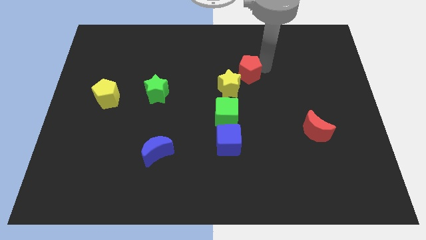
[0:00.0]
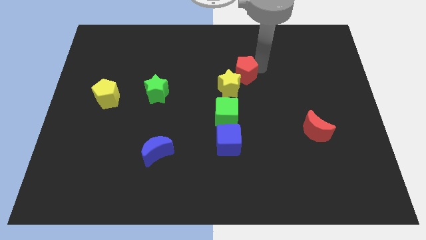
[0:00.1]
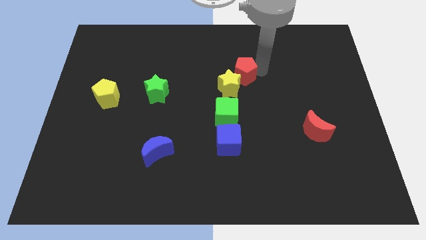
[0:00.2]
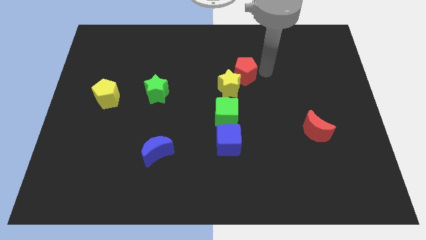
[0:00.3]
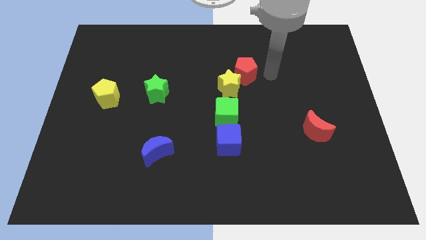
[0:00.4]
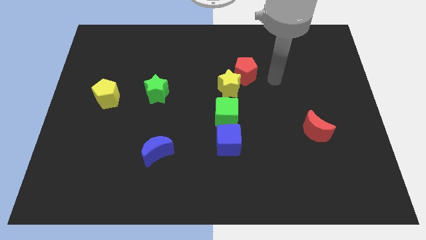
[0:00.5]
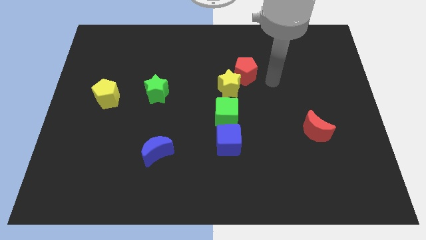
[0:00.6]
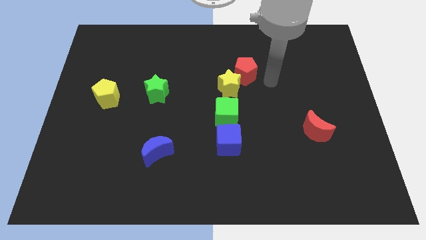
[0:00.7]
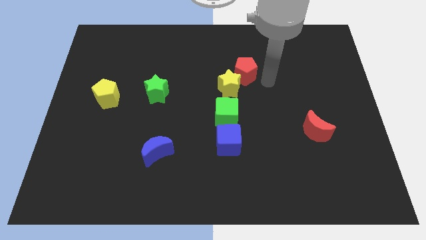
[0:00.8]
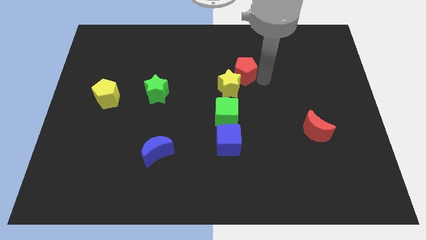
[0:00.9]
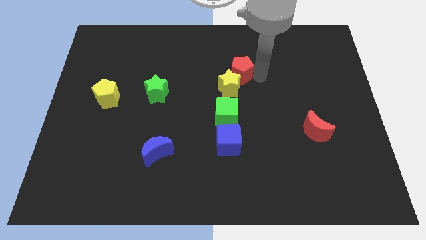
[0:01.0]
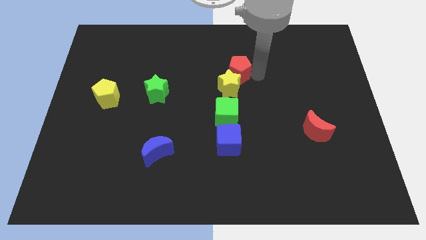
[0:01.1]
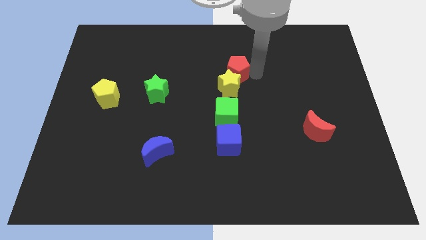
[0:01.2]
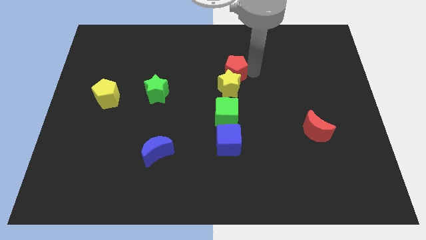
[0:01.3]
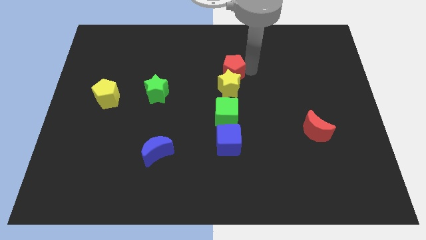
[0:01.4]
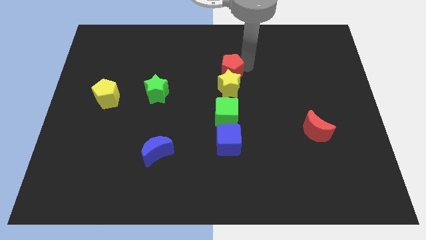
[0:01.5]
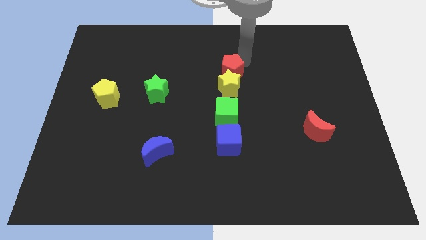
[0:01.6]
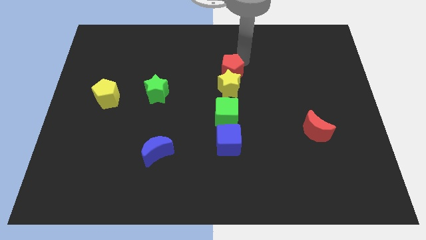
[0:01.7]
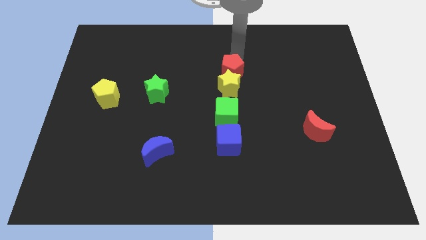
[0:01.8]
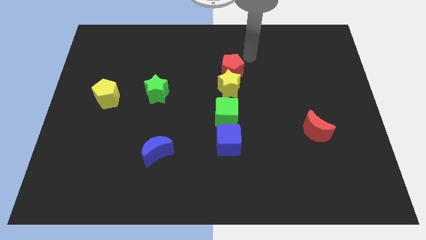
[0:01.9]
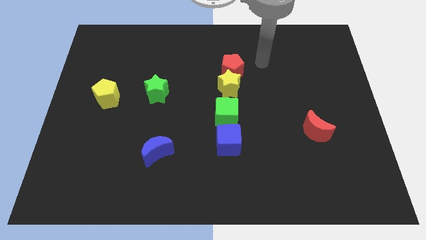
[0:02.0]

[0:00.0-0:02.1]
place red pentagon to the top of yellow star

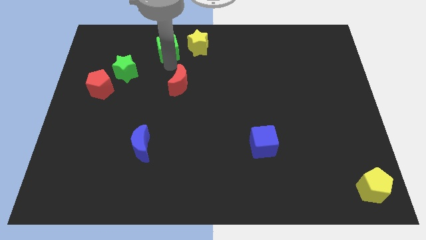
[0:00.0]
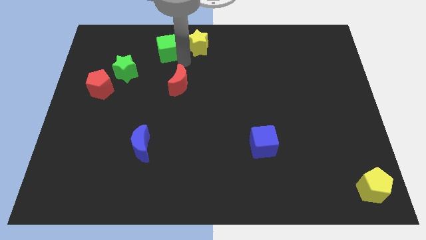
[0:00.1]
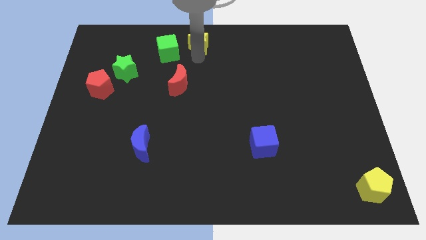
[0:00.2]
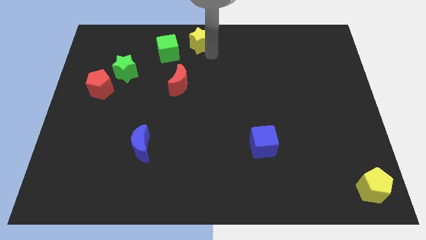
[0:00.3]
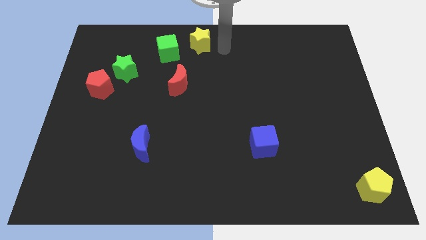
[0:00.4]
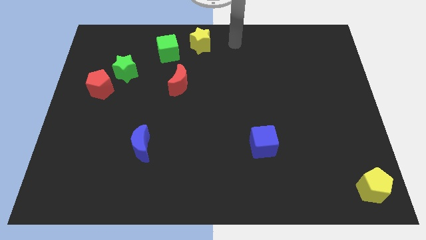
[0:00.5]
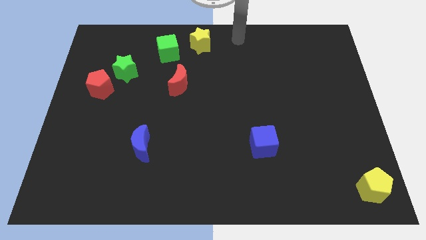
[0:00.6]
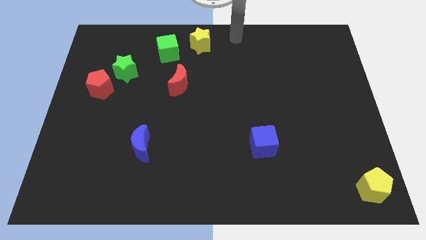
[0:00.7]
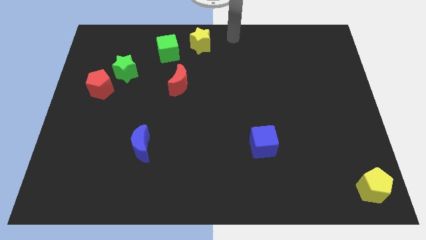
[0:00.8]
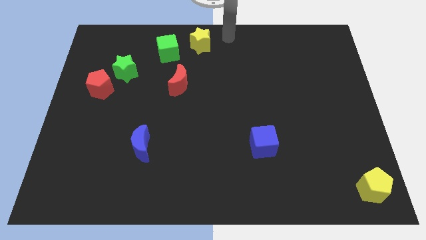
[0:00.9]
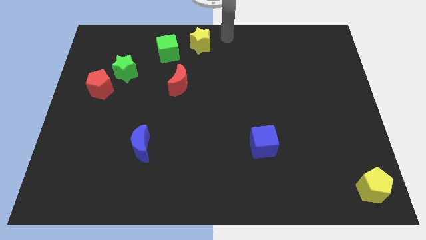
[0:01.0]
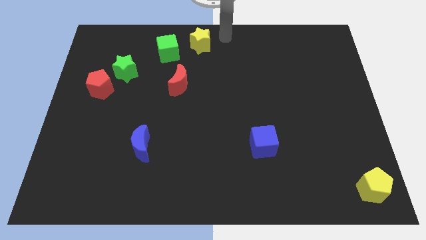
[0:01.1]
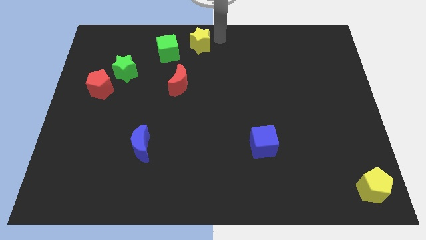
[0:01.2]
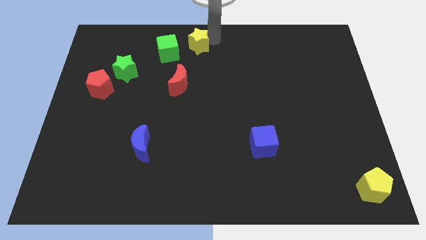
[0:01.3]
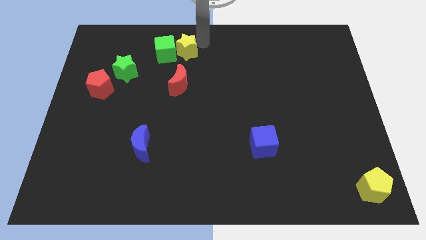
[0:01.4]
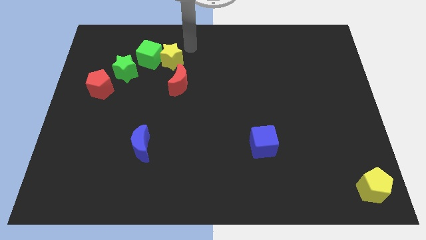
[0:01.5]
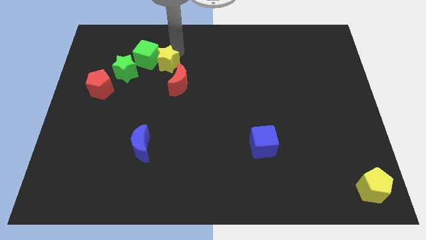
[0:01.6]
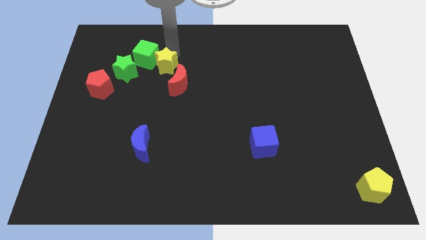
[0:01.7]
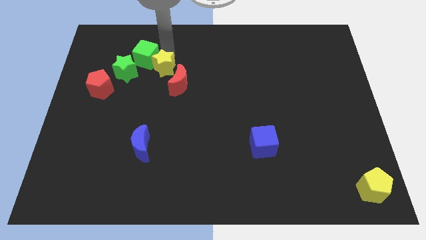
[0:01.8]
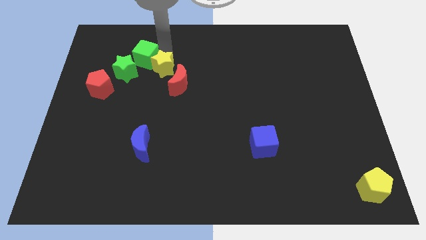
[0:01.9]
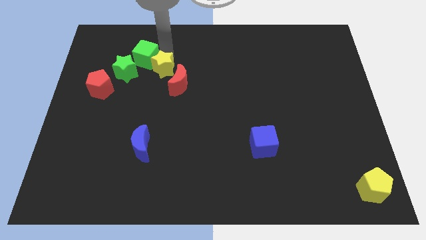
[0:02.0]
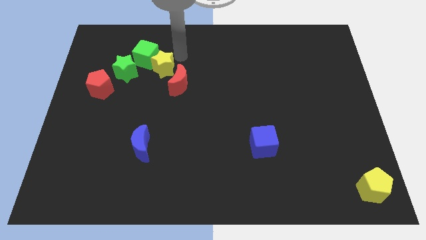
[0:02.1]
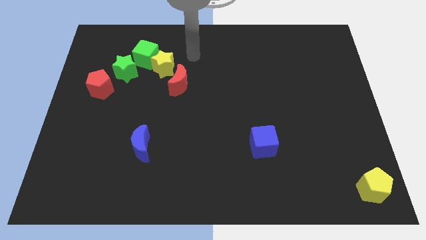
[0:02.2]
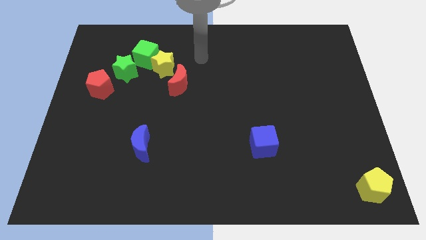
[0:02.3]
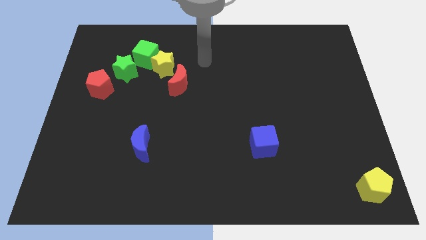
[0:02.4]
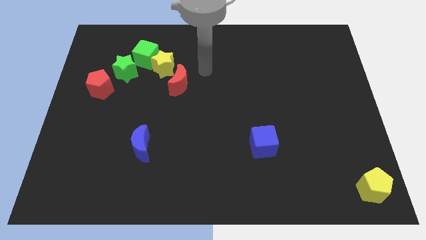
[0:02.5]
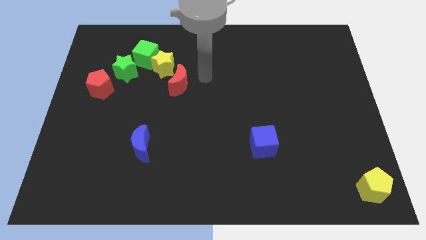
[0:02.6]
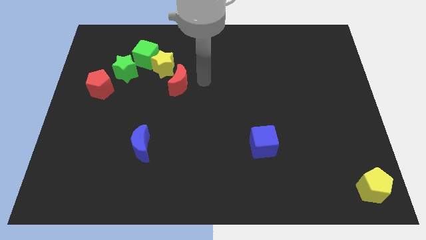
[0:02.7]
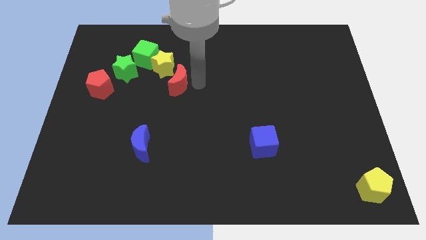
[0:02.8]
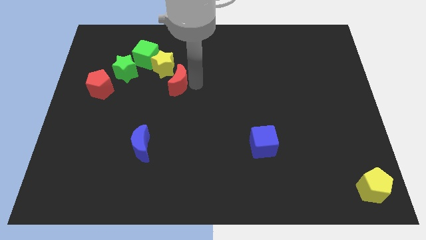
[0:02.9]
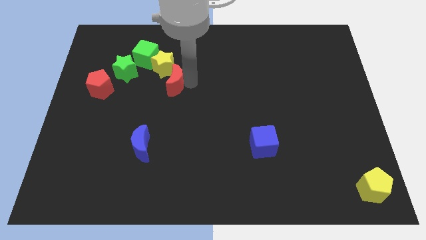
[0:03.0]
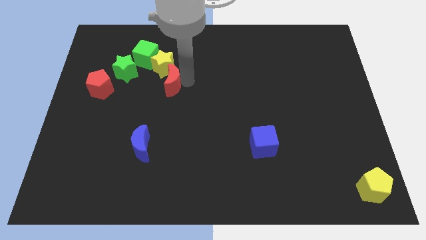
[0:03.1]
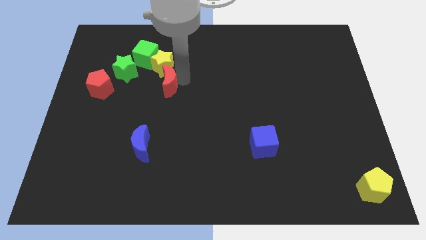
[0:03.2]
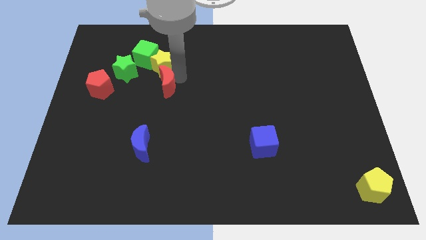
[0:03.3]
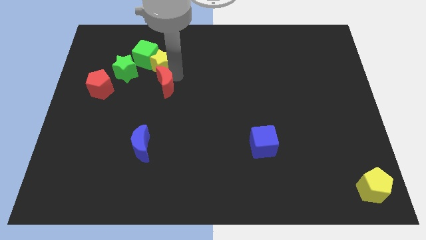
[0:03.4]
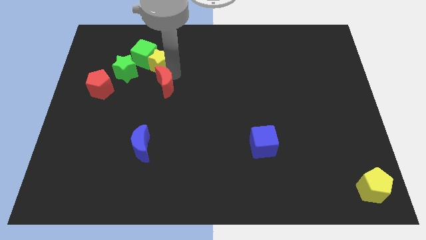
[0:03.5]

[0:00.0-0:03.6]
push the green cube yellow star and red moon to form a group

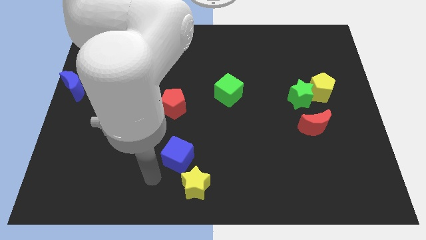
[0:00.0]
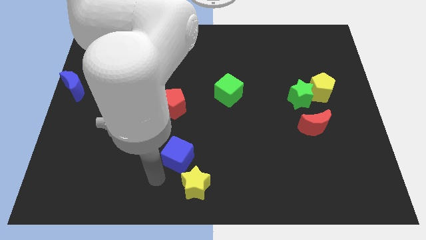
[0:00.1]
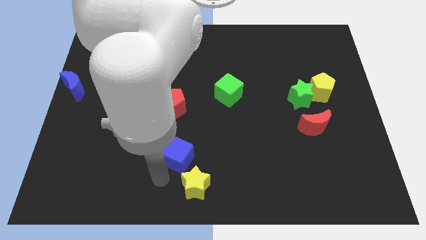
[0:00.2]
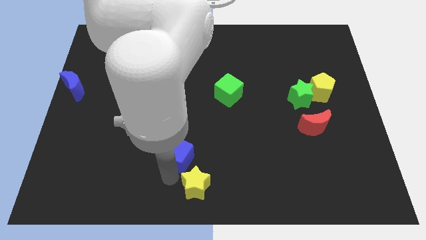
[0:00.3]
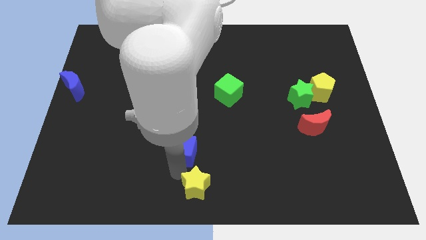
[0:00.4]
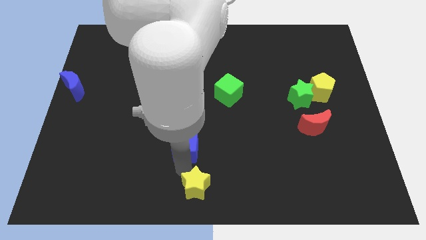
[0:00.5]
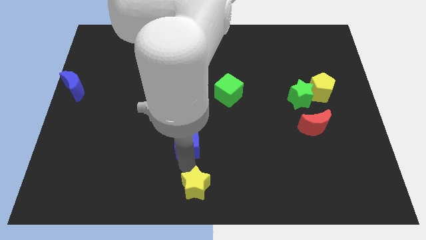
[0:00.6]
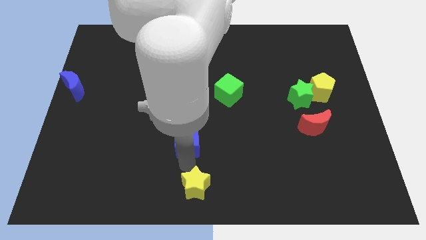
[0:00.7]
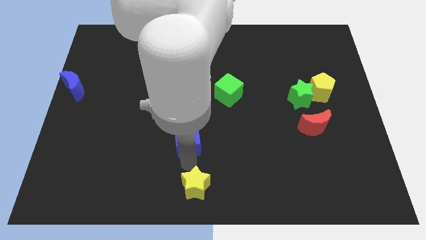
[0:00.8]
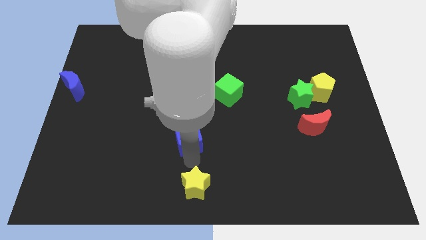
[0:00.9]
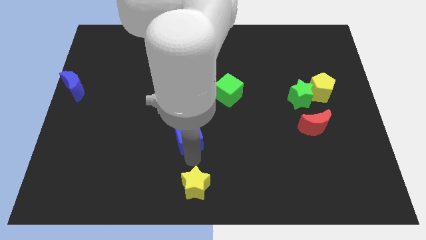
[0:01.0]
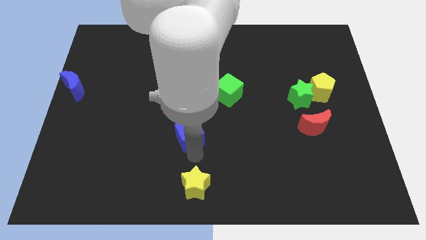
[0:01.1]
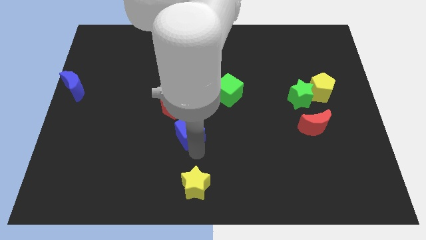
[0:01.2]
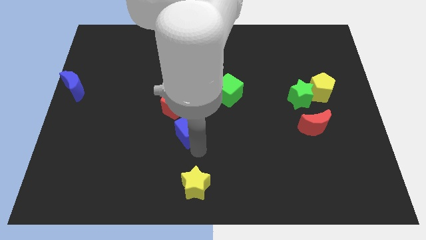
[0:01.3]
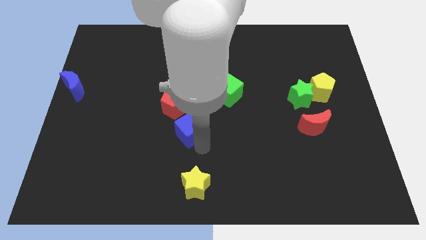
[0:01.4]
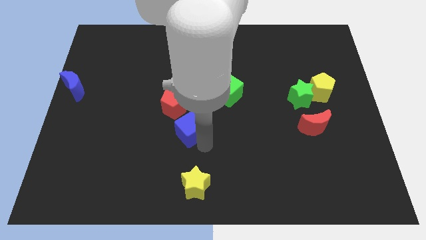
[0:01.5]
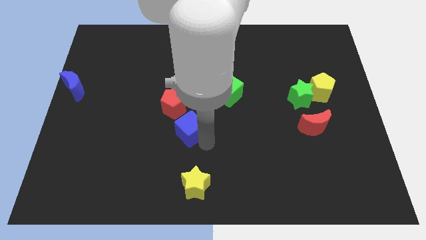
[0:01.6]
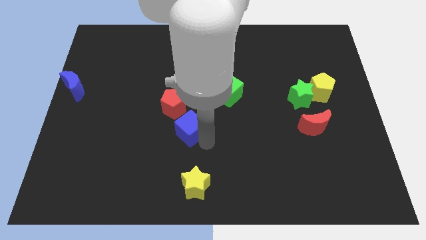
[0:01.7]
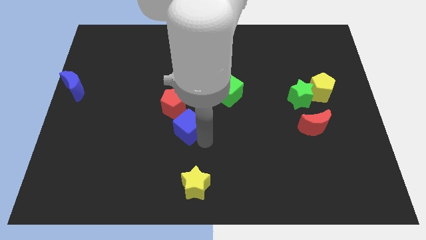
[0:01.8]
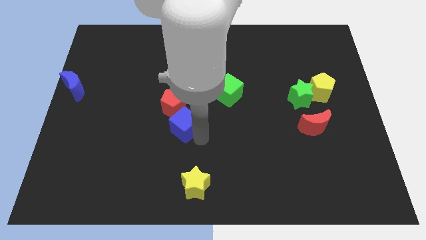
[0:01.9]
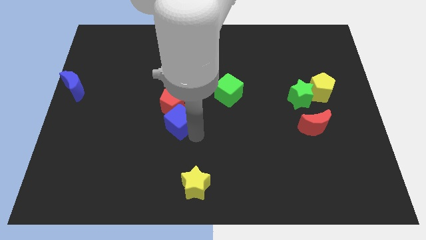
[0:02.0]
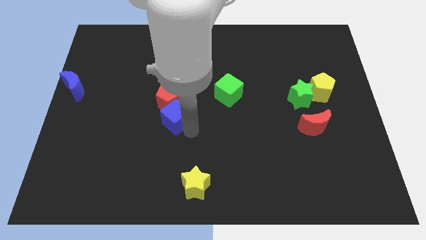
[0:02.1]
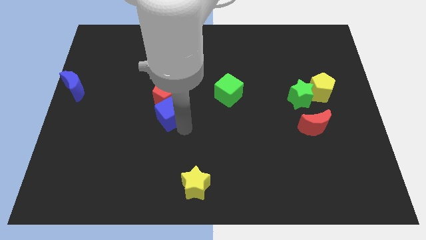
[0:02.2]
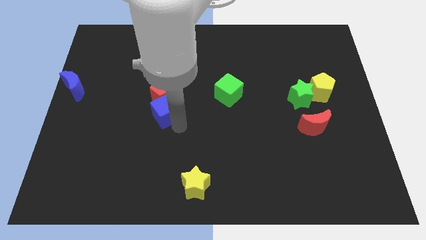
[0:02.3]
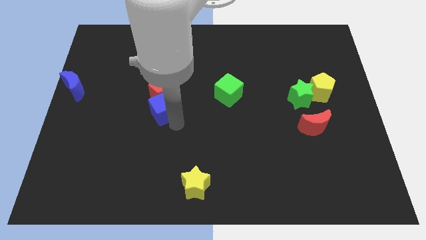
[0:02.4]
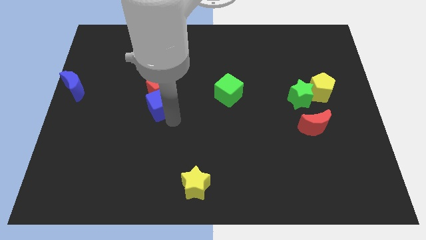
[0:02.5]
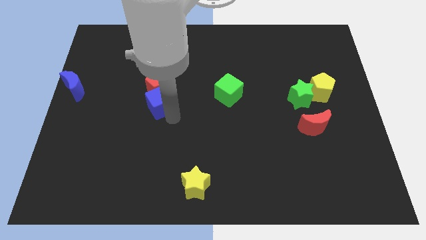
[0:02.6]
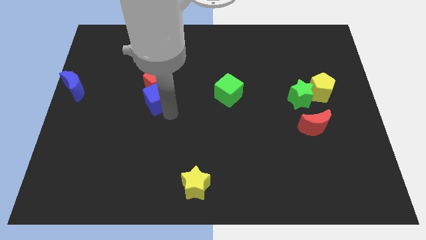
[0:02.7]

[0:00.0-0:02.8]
put the blue cube into the red pentagon

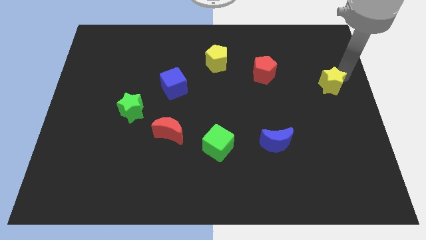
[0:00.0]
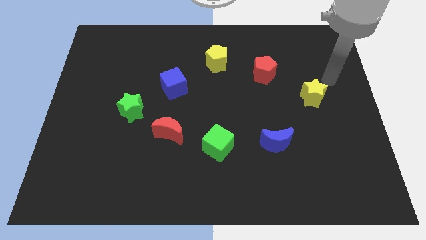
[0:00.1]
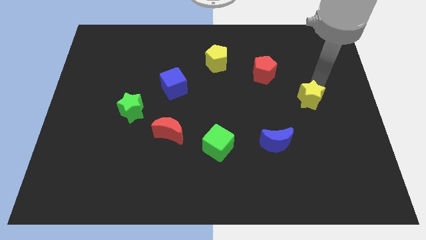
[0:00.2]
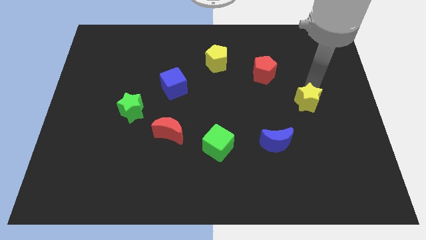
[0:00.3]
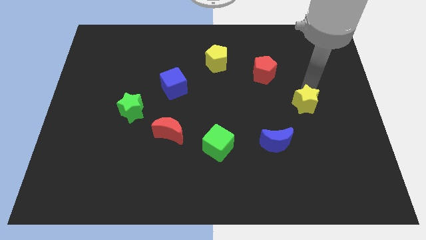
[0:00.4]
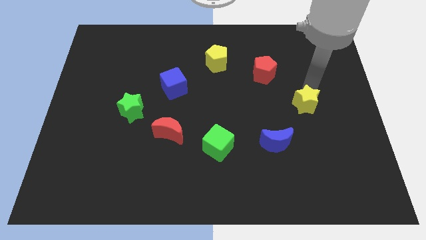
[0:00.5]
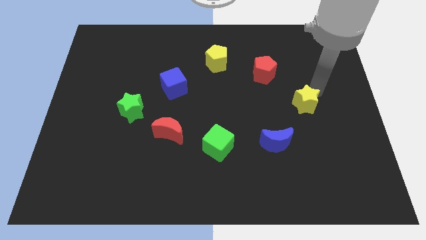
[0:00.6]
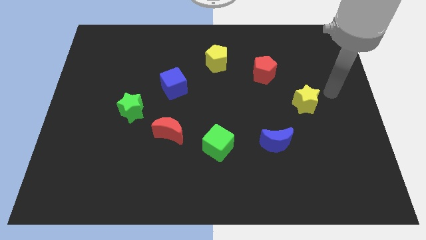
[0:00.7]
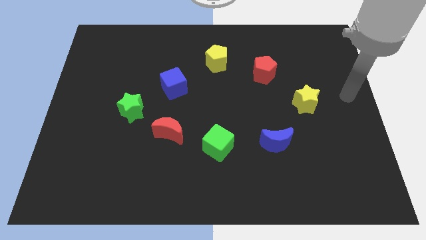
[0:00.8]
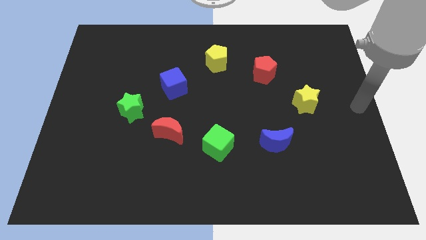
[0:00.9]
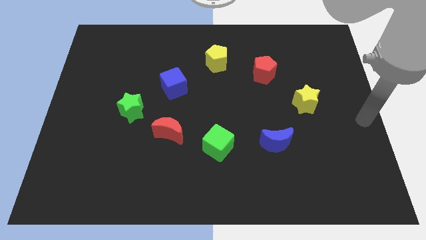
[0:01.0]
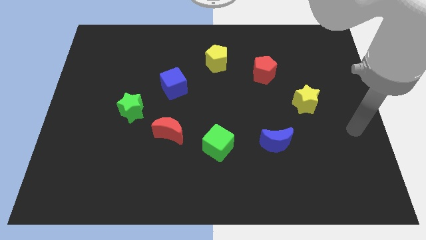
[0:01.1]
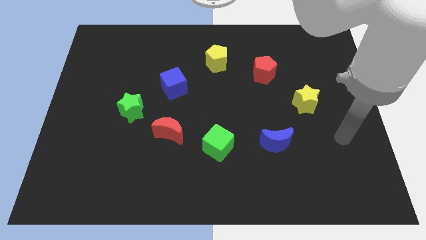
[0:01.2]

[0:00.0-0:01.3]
put the yellow star parallel to the green star
